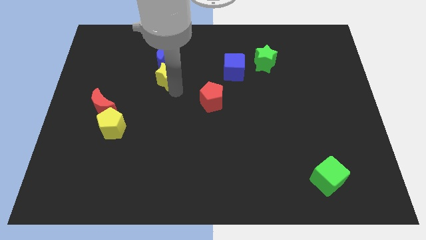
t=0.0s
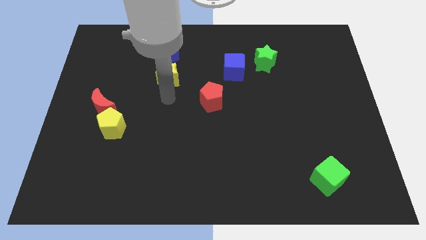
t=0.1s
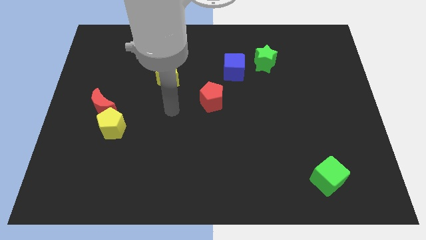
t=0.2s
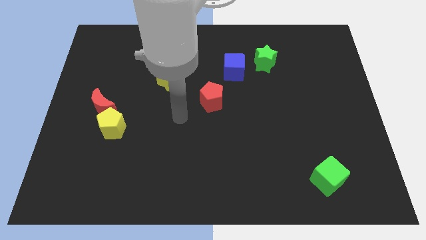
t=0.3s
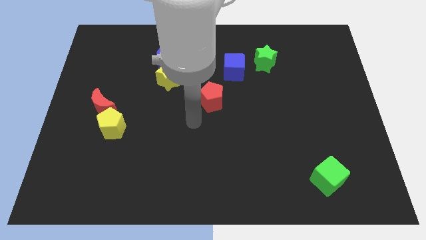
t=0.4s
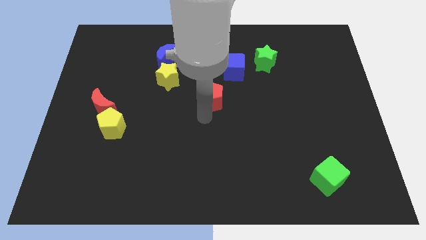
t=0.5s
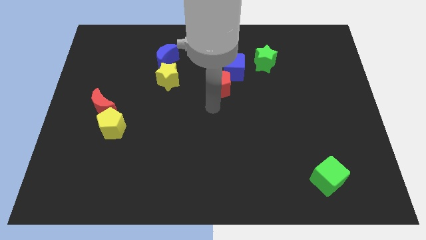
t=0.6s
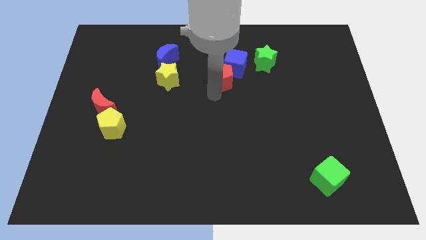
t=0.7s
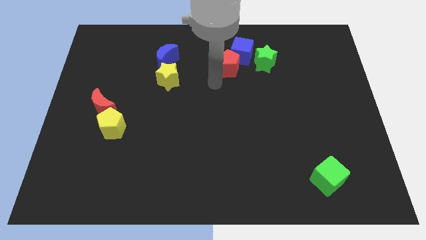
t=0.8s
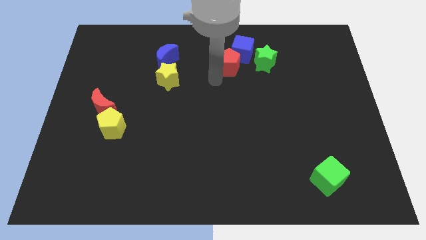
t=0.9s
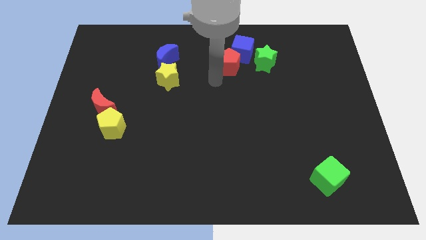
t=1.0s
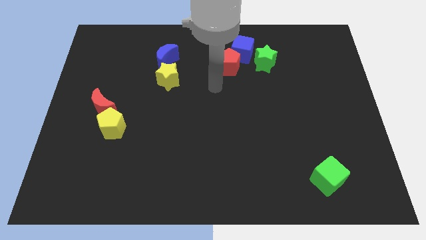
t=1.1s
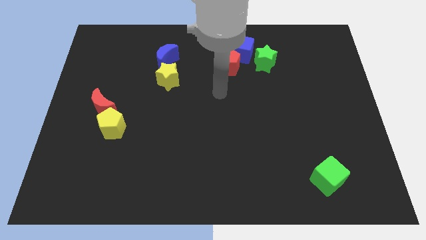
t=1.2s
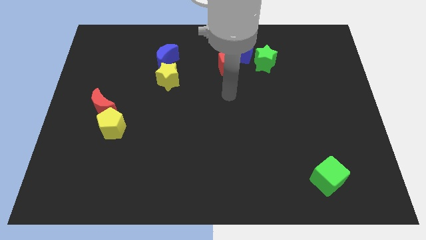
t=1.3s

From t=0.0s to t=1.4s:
push the red pentagon into the blue cube

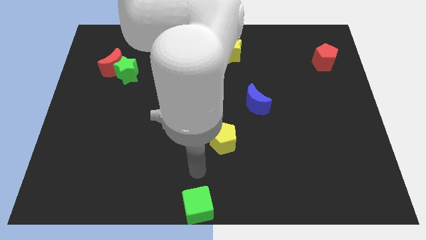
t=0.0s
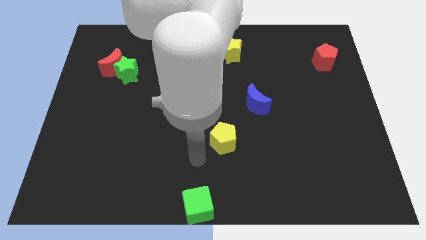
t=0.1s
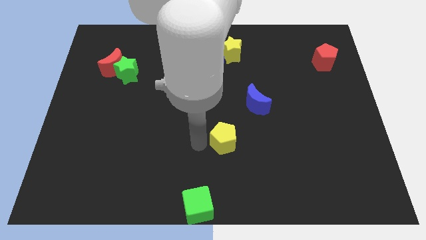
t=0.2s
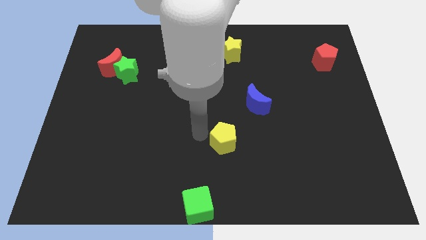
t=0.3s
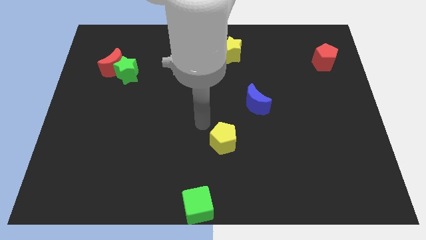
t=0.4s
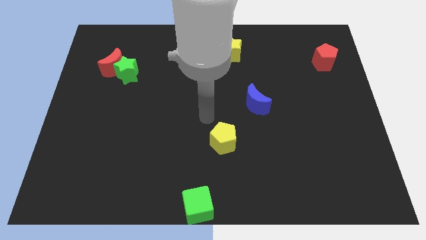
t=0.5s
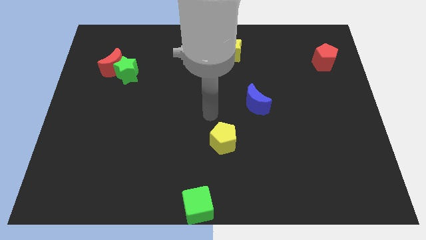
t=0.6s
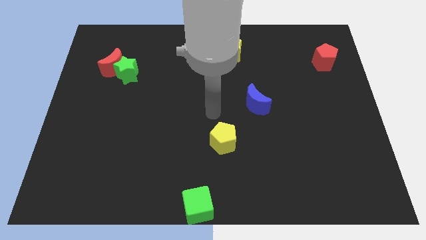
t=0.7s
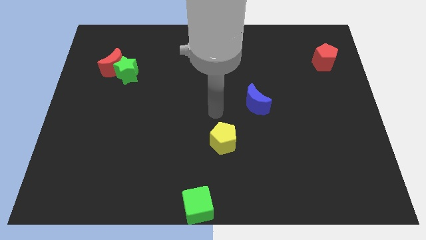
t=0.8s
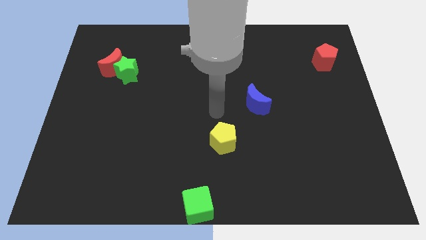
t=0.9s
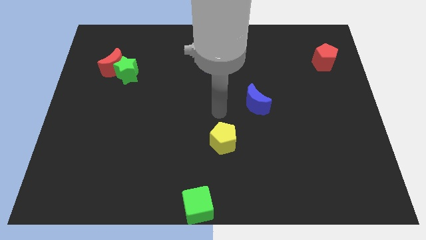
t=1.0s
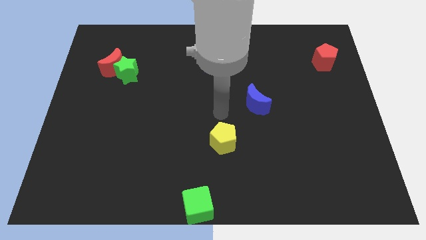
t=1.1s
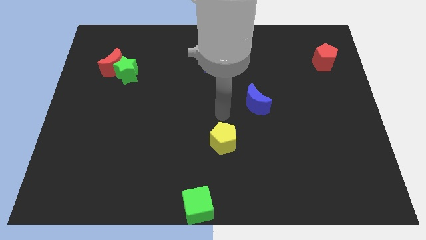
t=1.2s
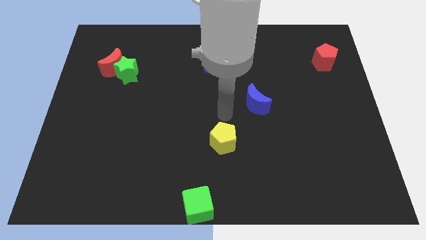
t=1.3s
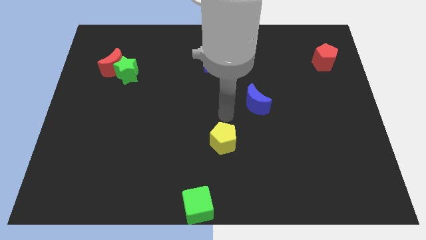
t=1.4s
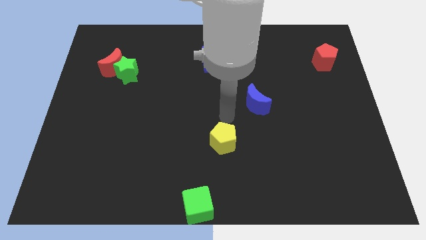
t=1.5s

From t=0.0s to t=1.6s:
point your arm at the top of the yellow pentagon

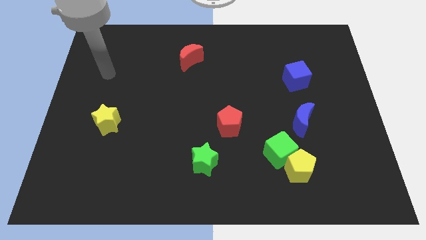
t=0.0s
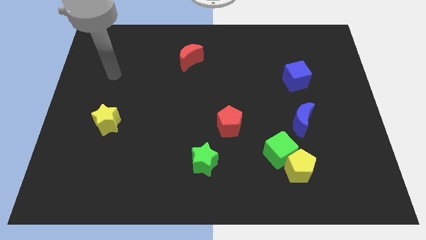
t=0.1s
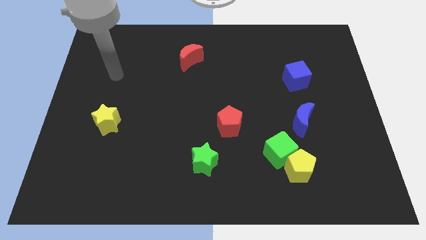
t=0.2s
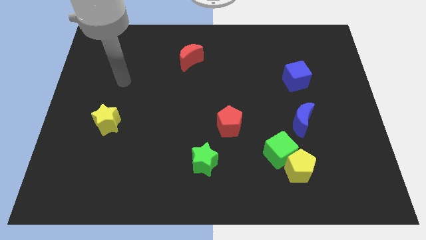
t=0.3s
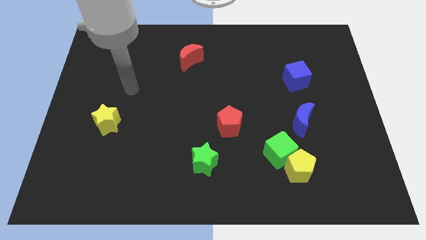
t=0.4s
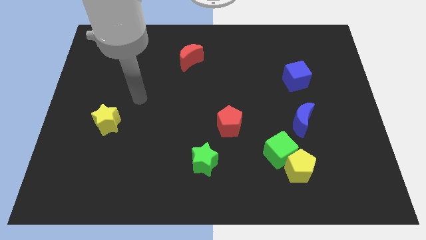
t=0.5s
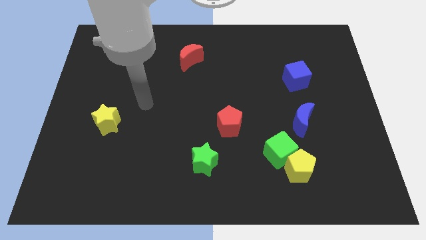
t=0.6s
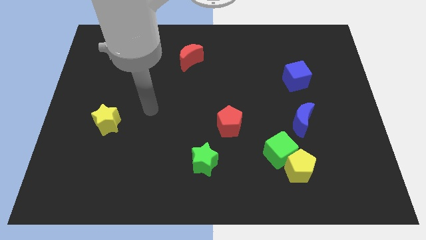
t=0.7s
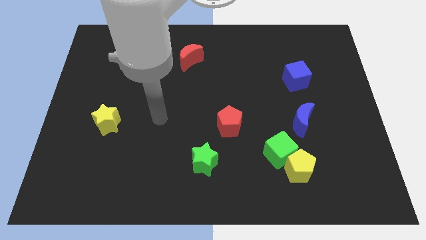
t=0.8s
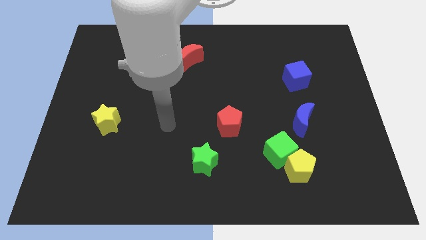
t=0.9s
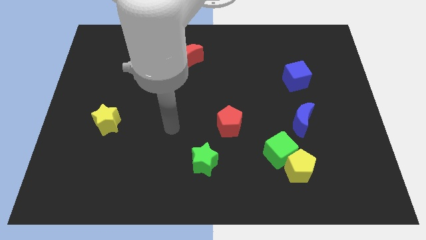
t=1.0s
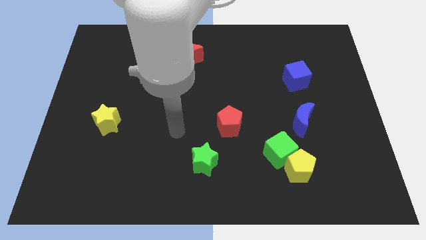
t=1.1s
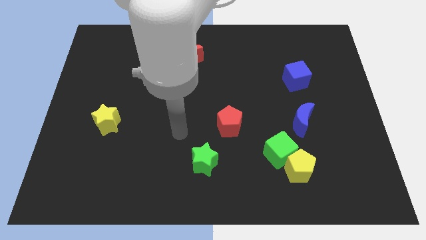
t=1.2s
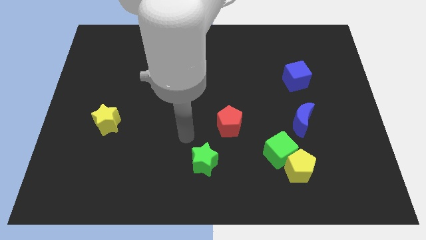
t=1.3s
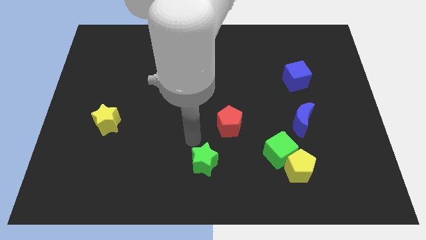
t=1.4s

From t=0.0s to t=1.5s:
move your arm on top of the green star

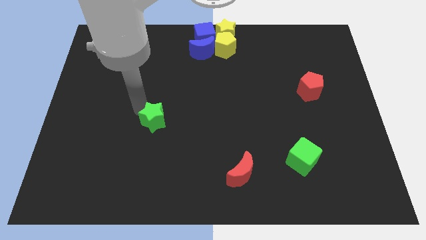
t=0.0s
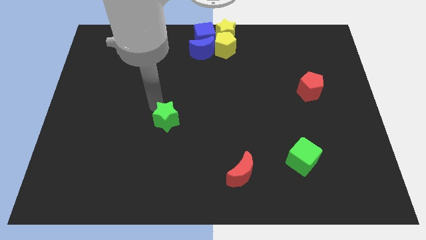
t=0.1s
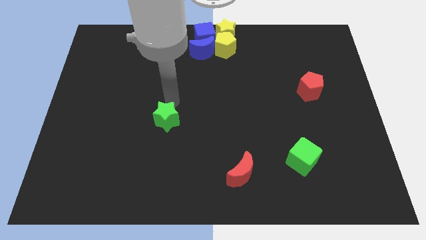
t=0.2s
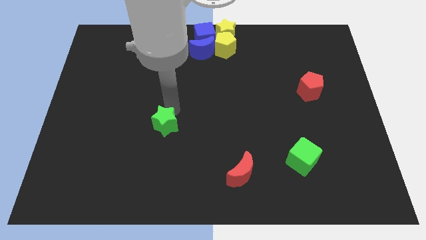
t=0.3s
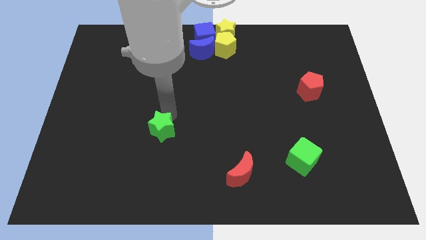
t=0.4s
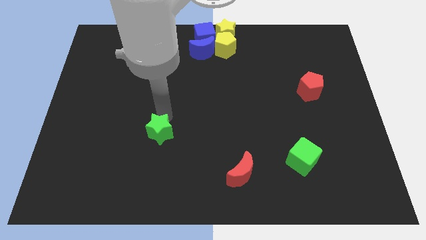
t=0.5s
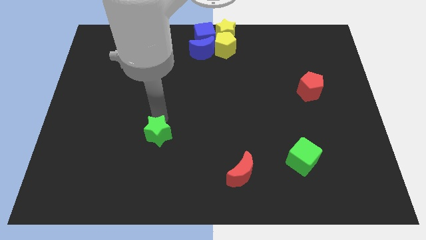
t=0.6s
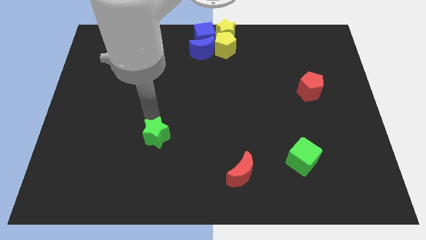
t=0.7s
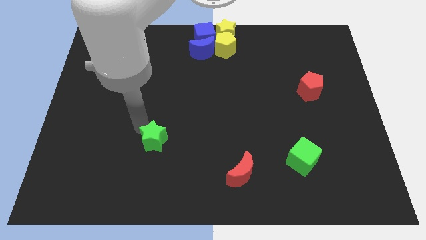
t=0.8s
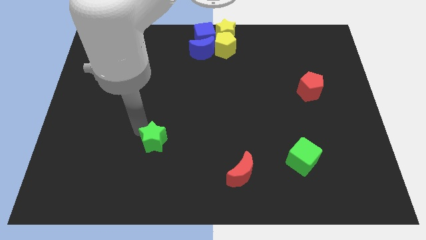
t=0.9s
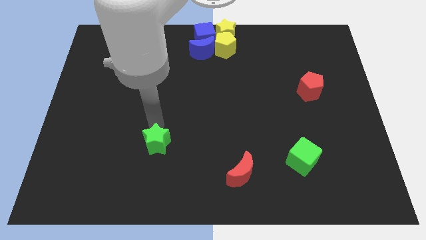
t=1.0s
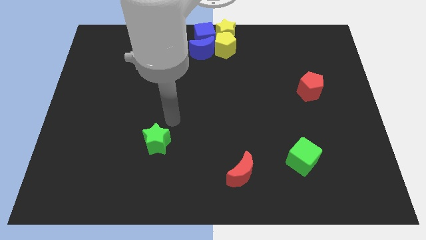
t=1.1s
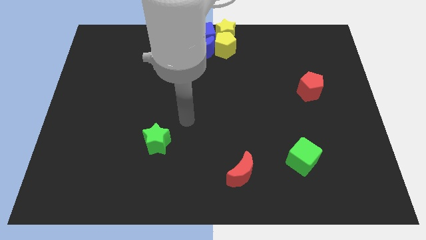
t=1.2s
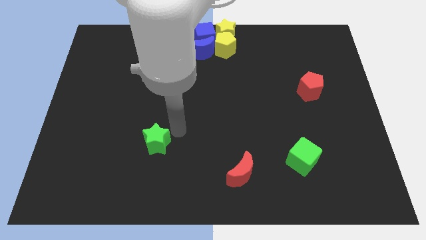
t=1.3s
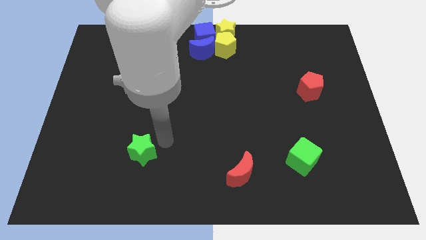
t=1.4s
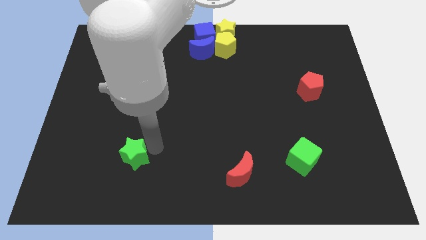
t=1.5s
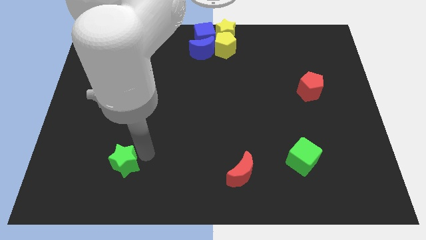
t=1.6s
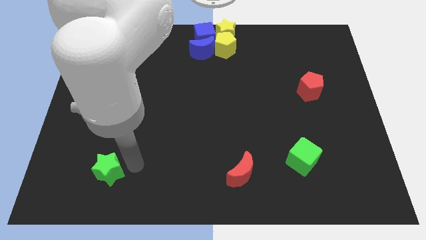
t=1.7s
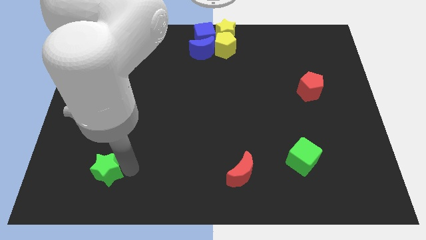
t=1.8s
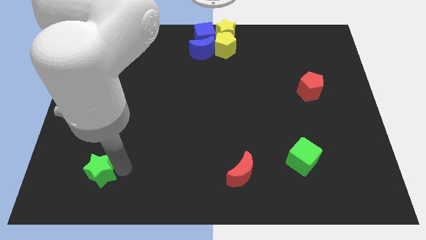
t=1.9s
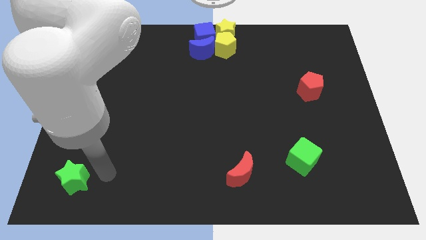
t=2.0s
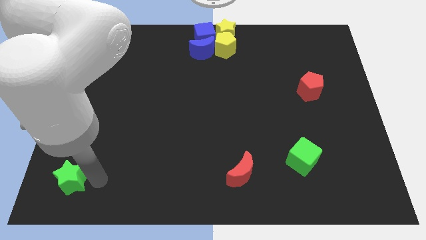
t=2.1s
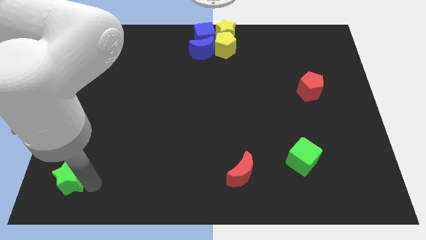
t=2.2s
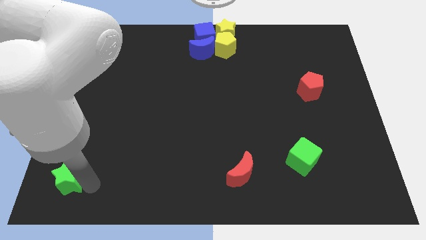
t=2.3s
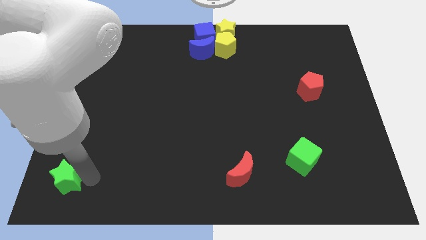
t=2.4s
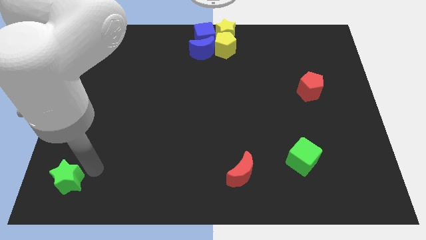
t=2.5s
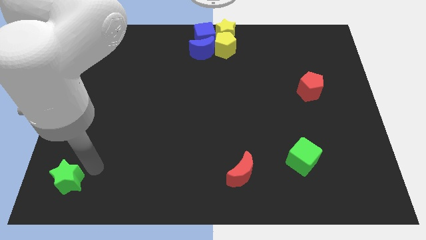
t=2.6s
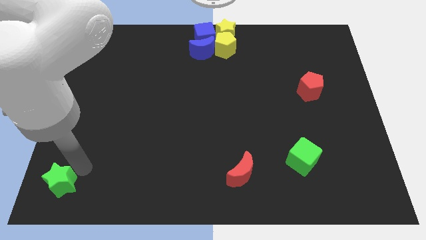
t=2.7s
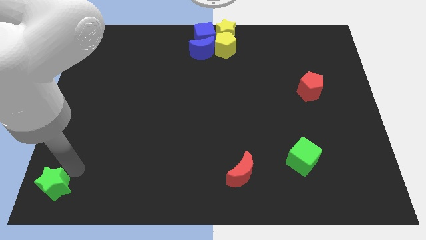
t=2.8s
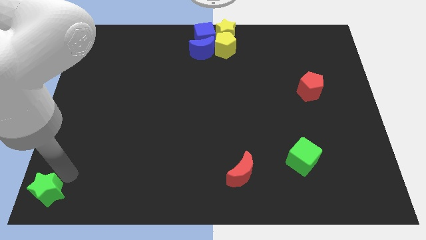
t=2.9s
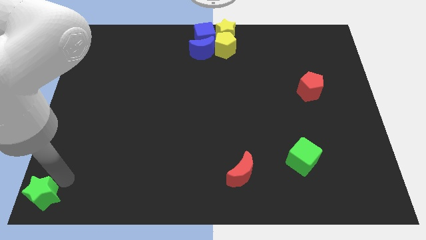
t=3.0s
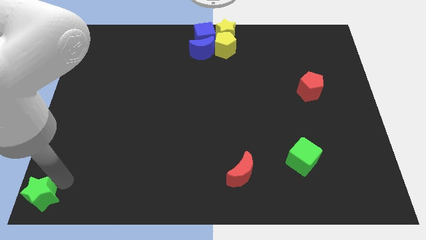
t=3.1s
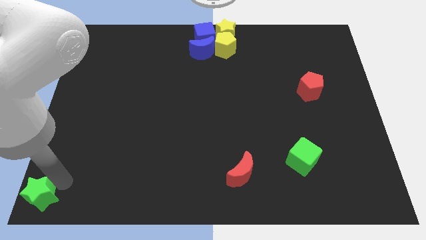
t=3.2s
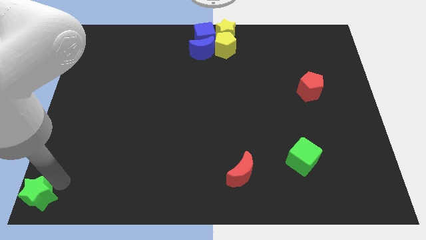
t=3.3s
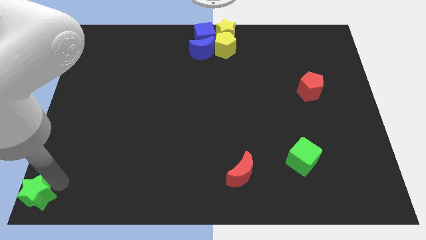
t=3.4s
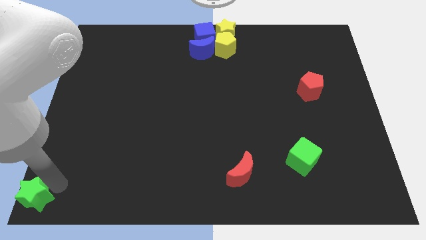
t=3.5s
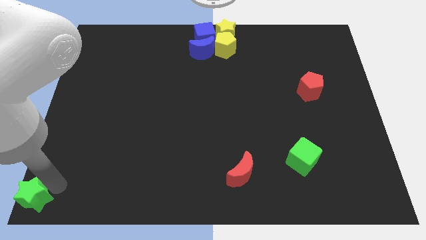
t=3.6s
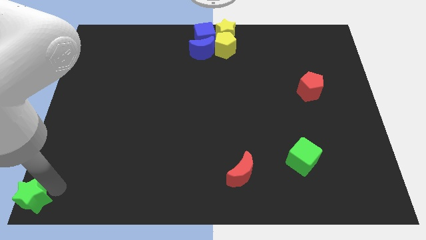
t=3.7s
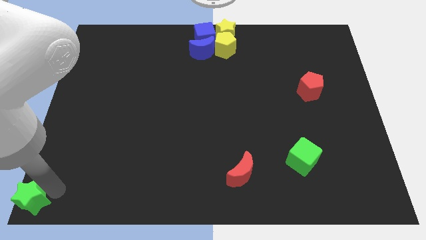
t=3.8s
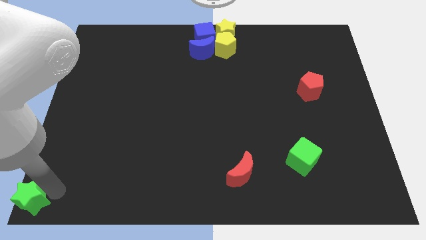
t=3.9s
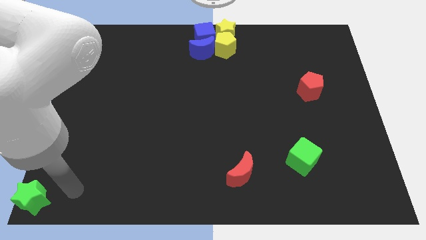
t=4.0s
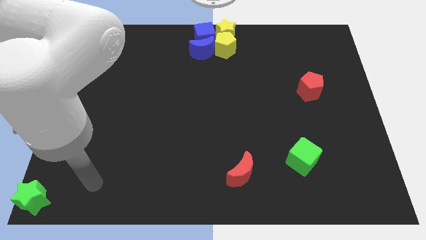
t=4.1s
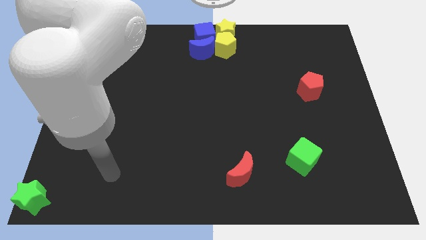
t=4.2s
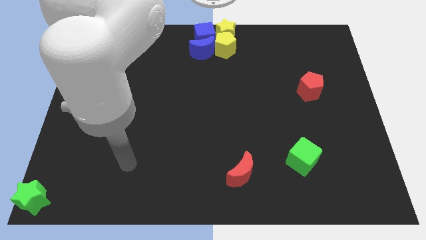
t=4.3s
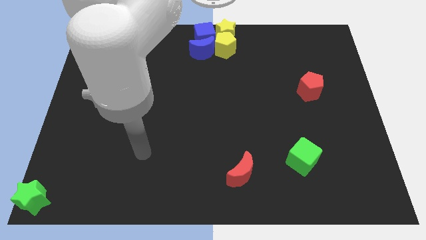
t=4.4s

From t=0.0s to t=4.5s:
move the green star to the bottom left corner of the board
